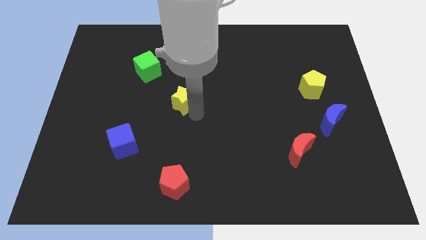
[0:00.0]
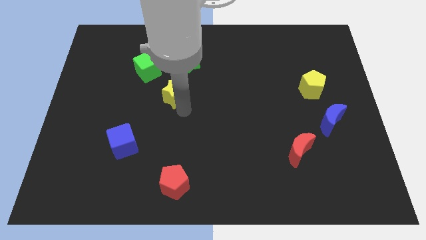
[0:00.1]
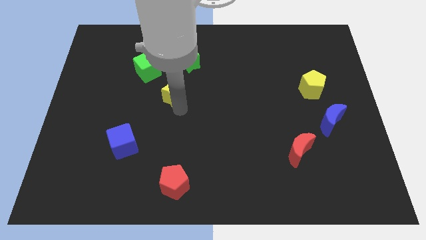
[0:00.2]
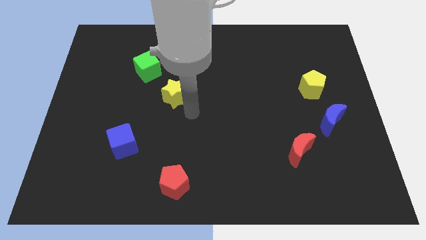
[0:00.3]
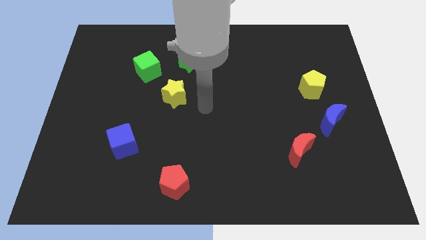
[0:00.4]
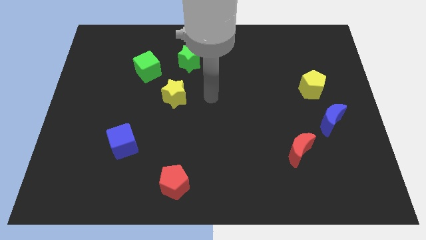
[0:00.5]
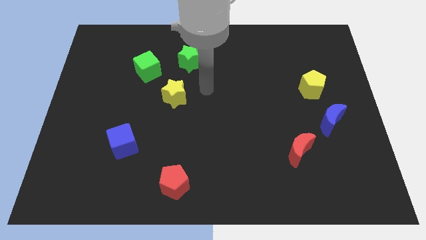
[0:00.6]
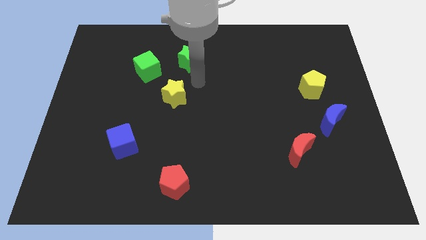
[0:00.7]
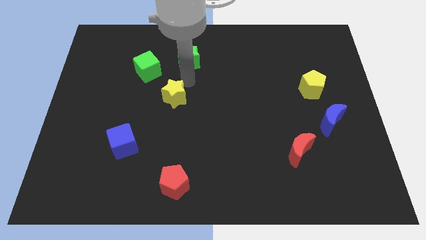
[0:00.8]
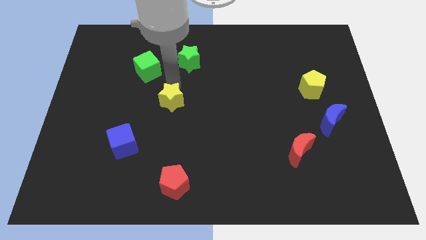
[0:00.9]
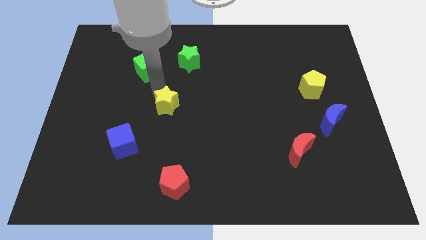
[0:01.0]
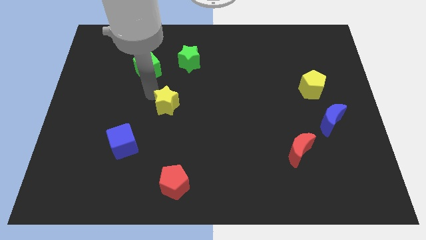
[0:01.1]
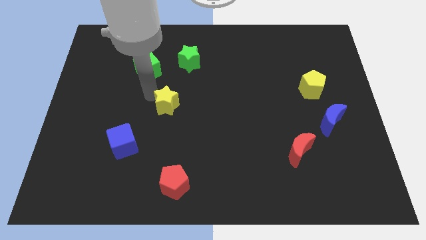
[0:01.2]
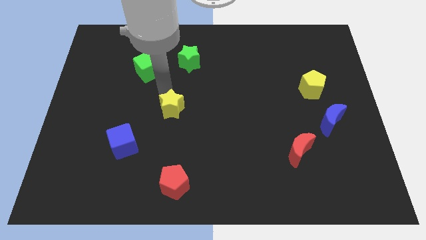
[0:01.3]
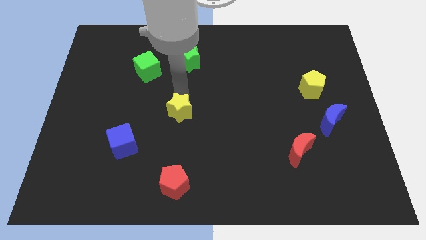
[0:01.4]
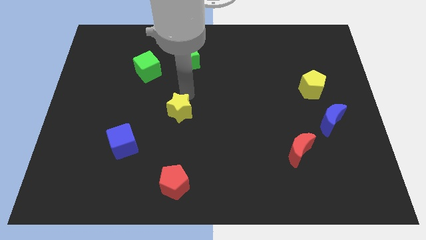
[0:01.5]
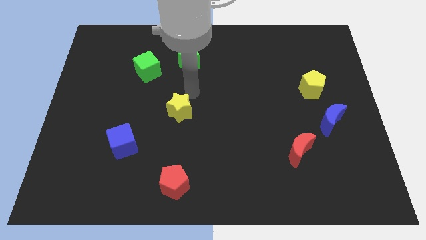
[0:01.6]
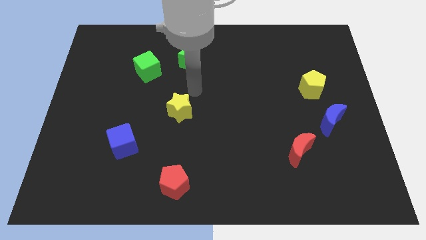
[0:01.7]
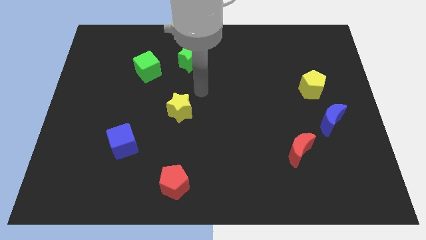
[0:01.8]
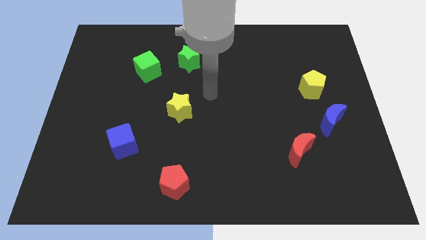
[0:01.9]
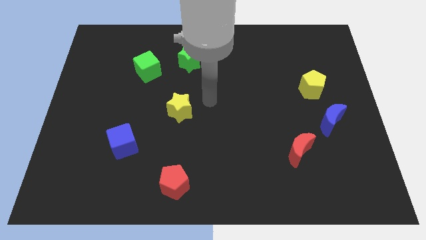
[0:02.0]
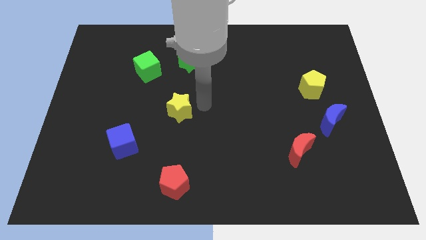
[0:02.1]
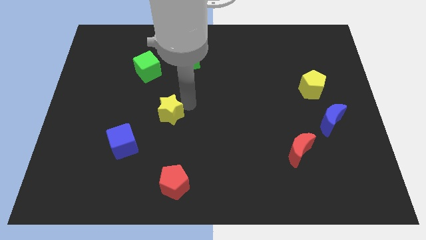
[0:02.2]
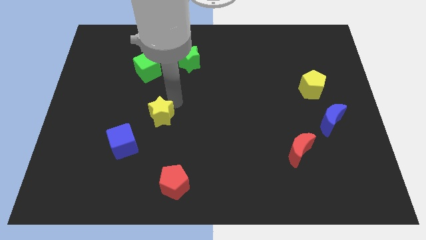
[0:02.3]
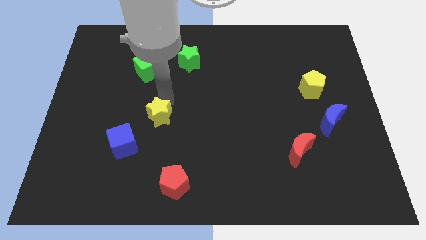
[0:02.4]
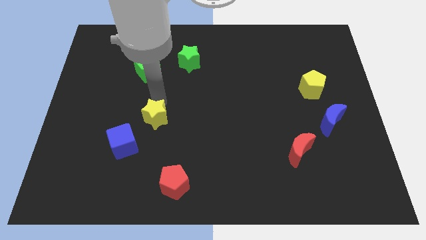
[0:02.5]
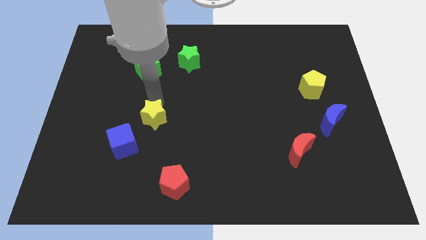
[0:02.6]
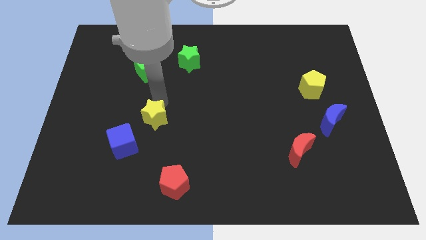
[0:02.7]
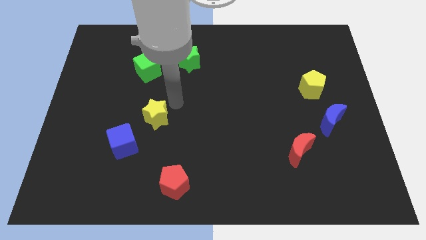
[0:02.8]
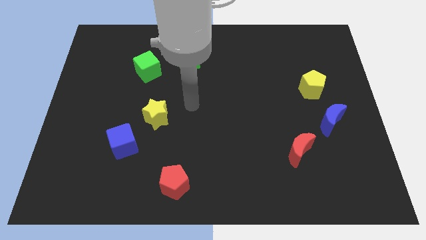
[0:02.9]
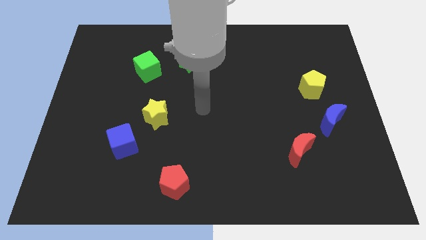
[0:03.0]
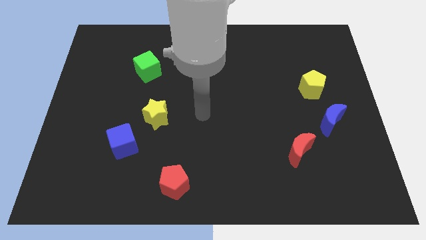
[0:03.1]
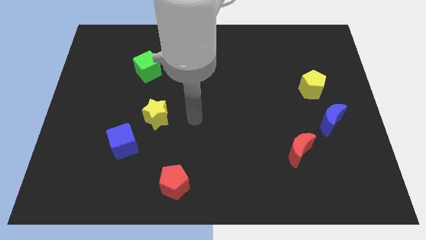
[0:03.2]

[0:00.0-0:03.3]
push the yellow star to the top right side of the blue cube

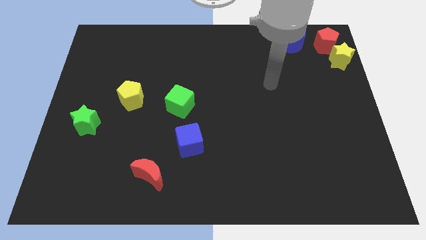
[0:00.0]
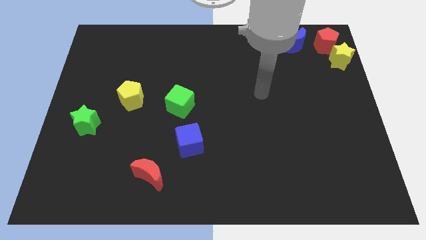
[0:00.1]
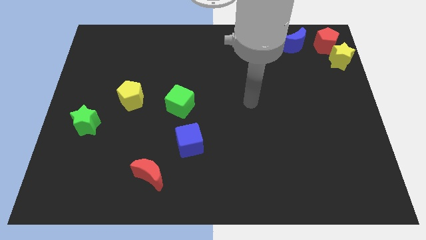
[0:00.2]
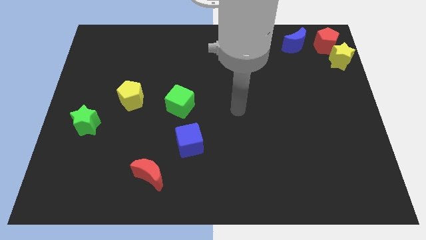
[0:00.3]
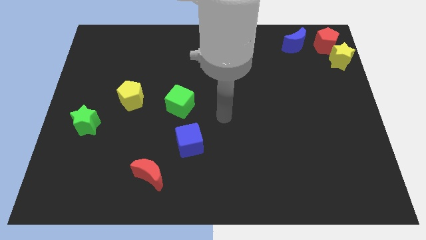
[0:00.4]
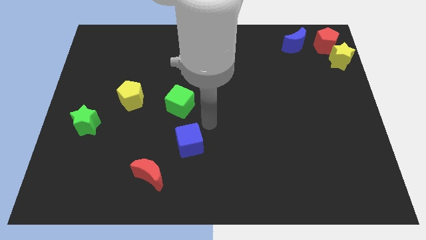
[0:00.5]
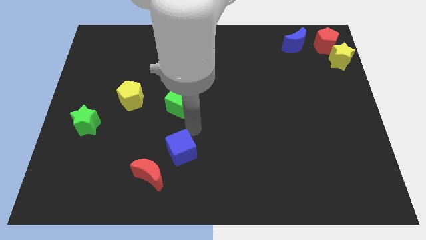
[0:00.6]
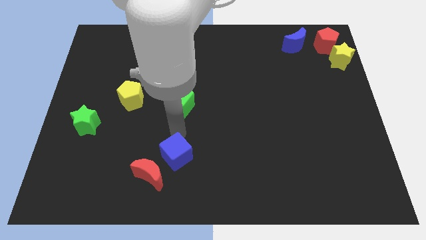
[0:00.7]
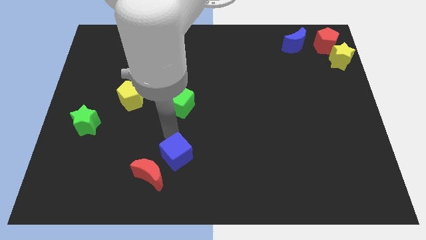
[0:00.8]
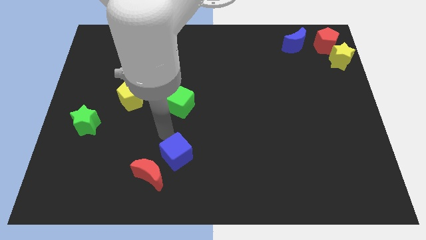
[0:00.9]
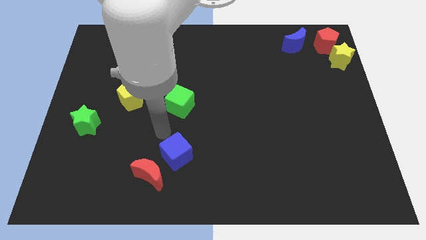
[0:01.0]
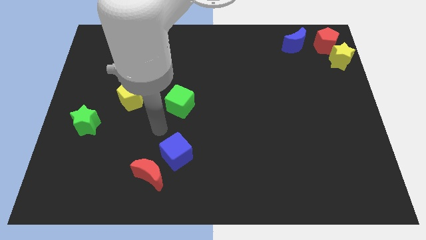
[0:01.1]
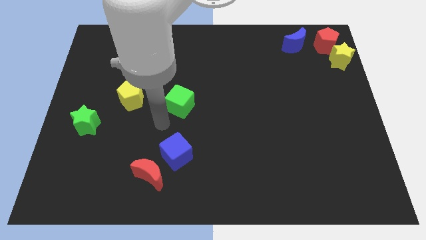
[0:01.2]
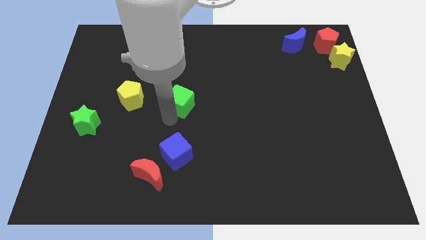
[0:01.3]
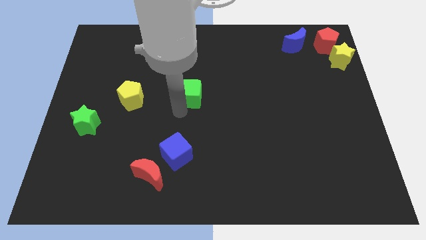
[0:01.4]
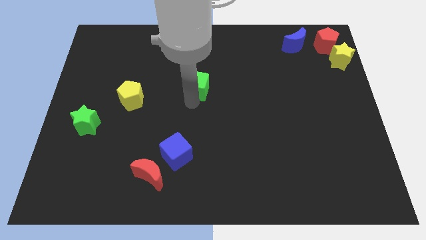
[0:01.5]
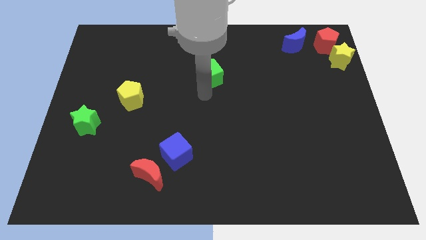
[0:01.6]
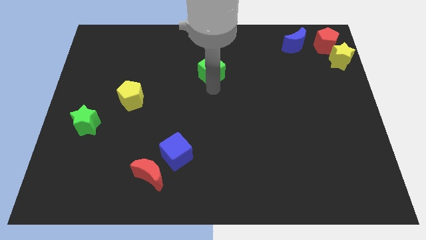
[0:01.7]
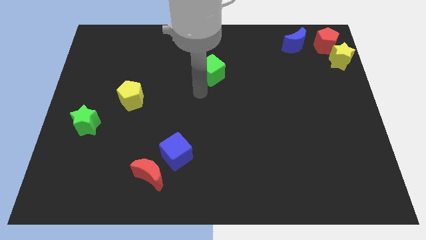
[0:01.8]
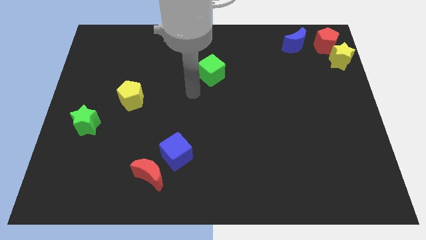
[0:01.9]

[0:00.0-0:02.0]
slightly push the blue cube

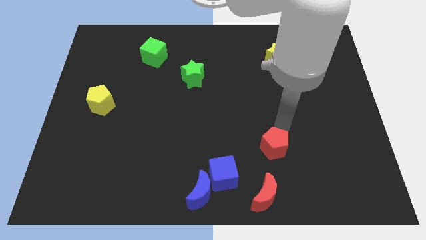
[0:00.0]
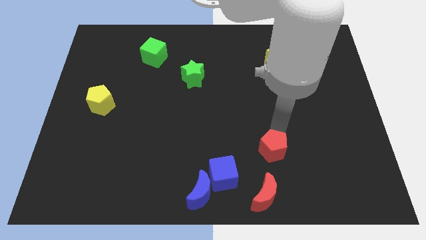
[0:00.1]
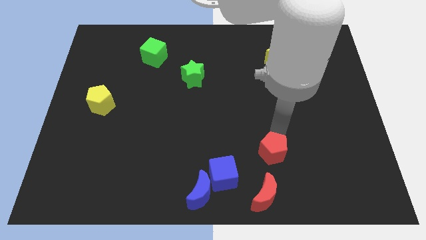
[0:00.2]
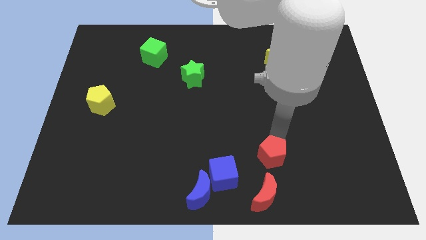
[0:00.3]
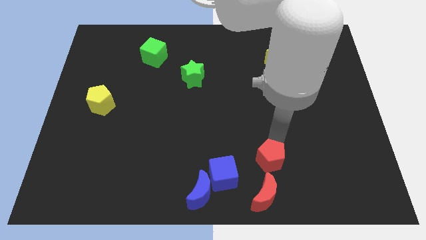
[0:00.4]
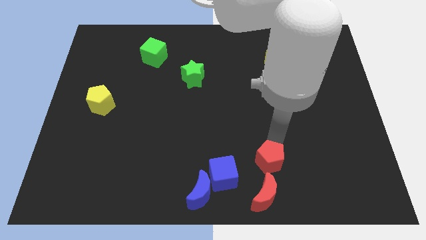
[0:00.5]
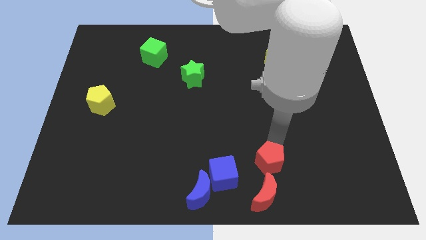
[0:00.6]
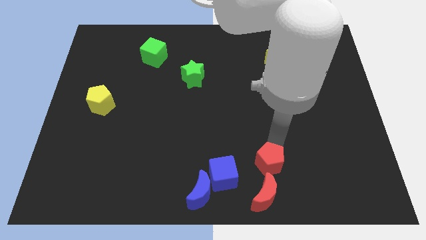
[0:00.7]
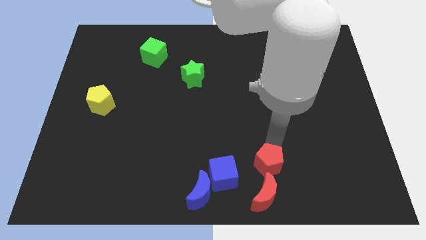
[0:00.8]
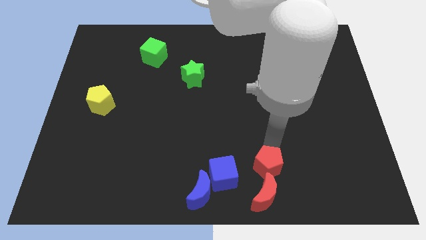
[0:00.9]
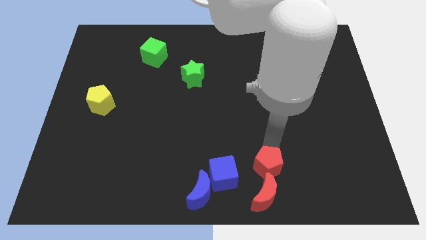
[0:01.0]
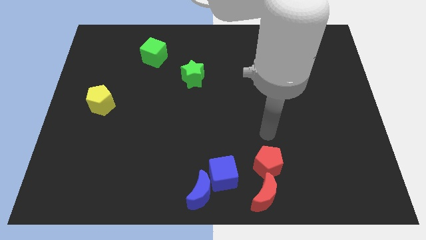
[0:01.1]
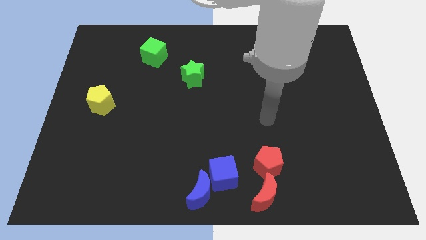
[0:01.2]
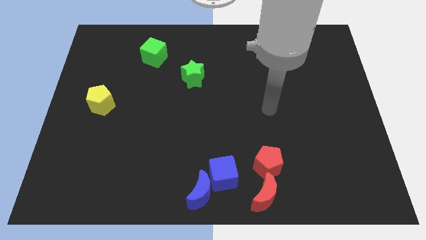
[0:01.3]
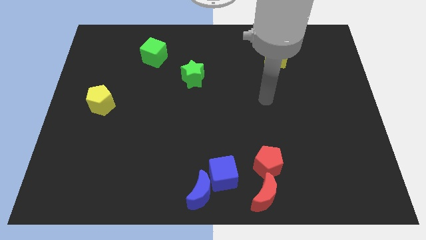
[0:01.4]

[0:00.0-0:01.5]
place the red pentagon above the red crescent

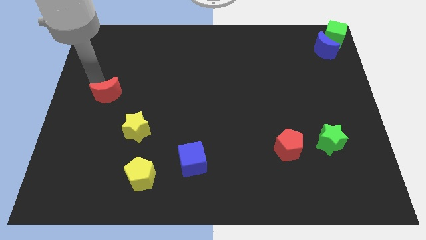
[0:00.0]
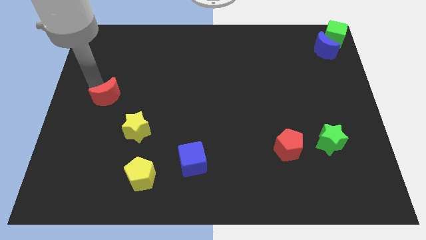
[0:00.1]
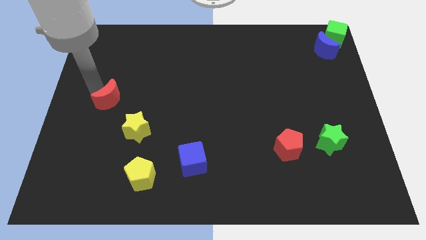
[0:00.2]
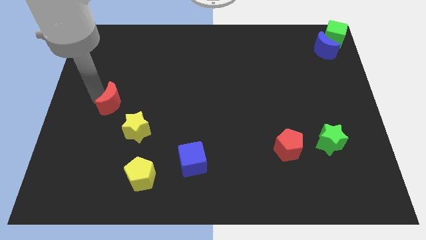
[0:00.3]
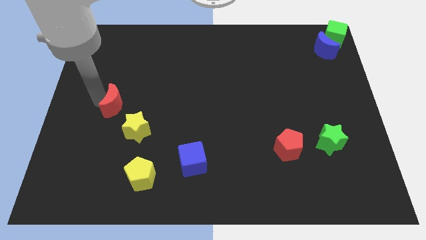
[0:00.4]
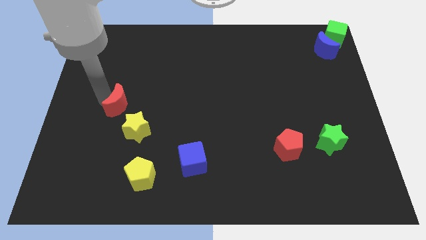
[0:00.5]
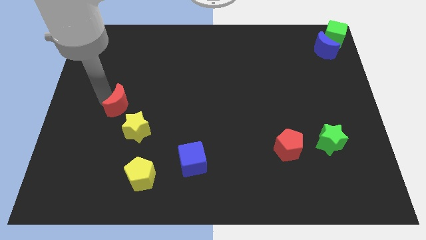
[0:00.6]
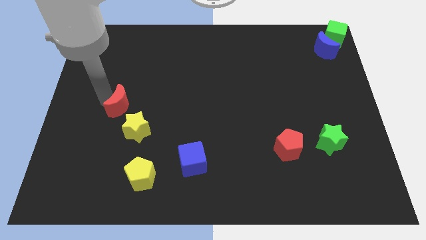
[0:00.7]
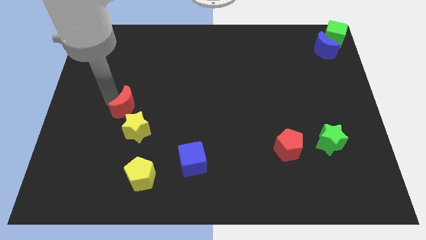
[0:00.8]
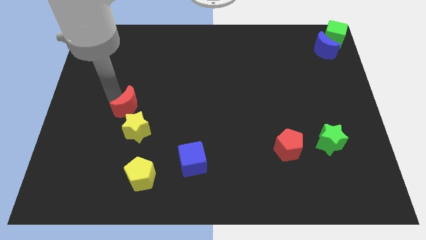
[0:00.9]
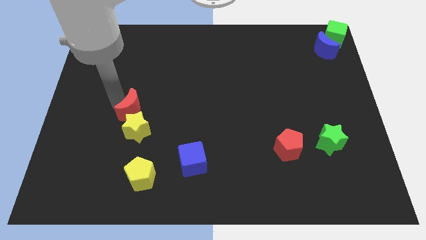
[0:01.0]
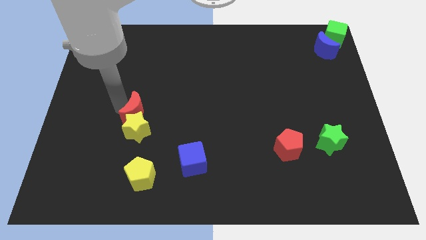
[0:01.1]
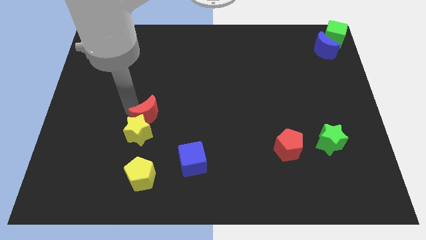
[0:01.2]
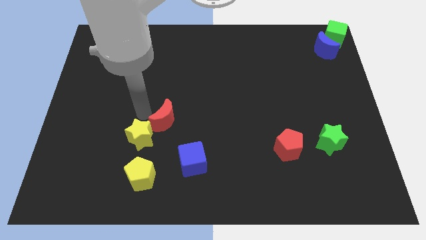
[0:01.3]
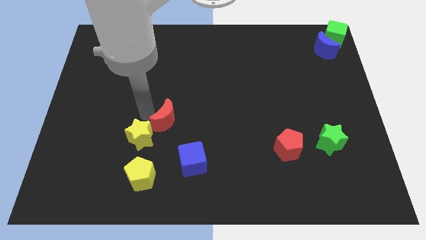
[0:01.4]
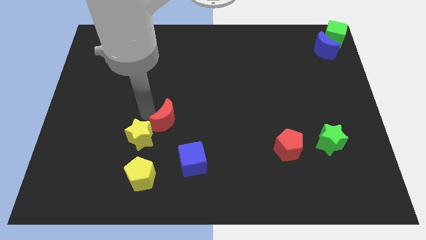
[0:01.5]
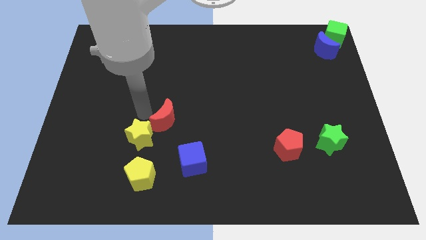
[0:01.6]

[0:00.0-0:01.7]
move the red moon into the yellow star

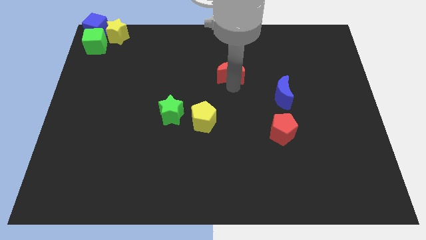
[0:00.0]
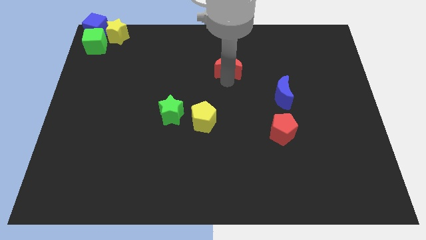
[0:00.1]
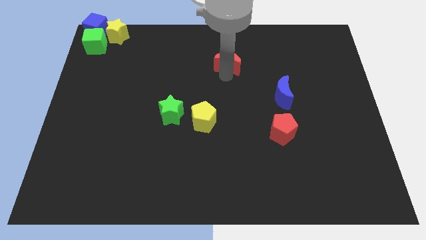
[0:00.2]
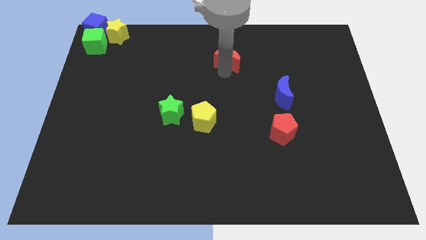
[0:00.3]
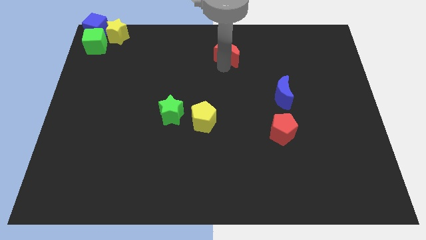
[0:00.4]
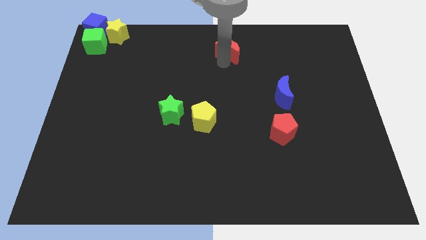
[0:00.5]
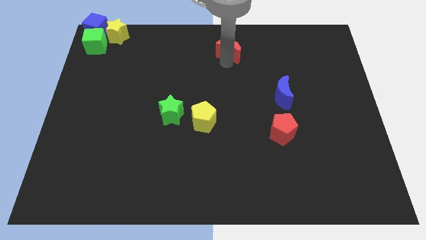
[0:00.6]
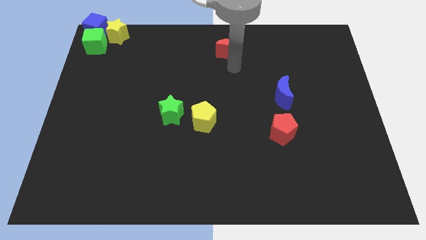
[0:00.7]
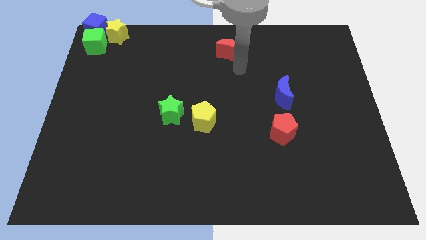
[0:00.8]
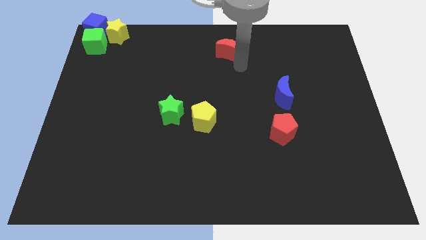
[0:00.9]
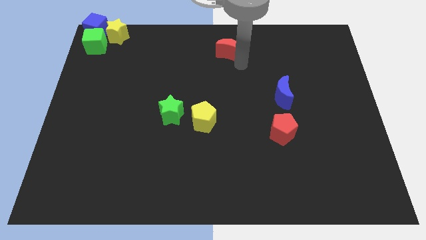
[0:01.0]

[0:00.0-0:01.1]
drag the red crescent to the top
